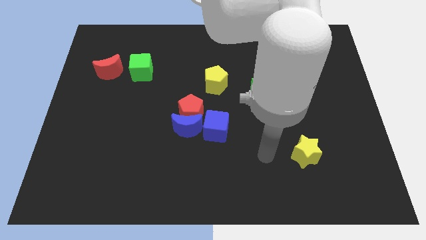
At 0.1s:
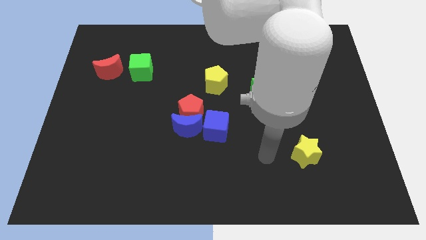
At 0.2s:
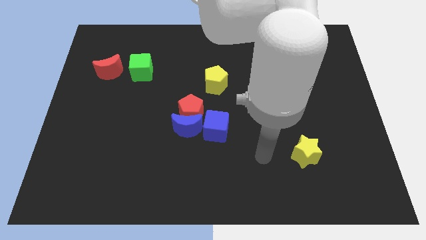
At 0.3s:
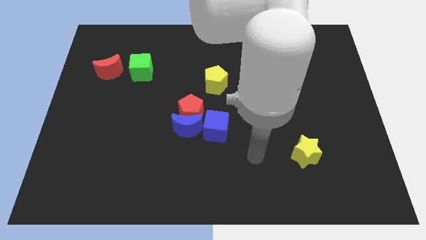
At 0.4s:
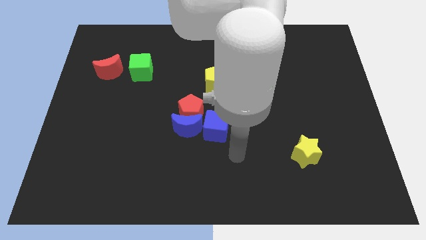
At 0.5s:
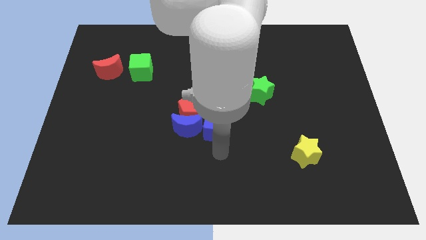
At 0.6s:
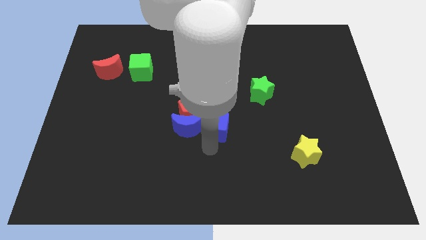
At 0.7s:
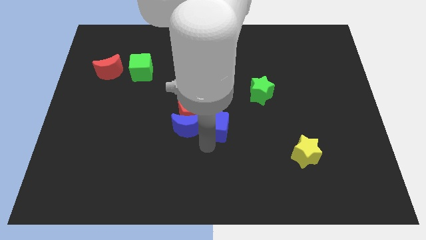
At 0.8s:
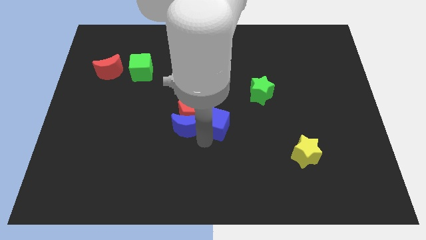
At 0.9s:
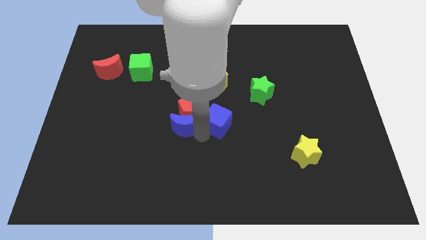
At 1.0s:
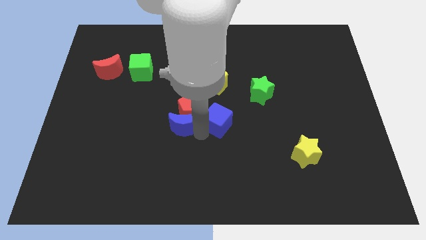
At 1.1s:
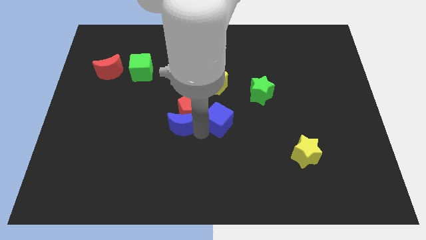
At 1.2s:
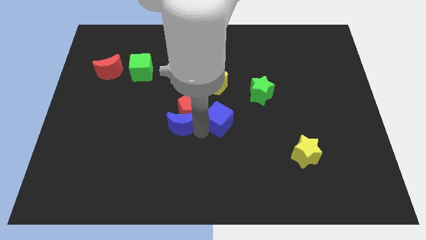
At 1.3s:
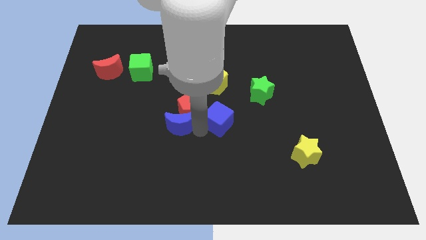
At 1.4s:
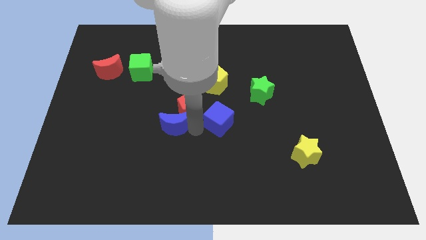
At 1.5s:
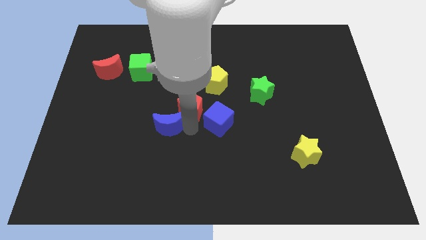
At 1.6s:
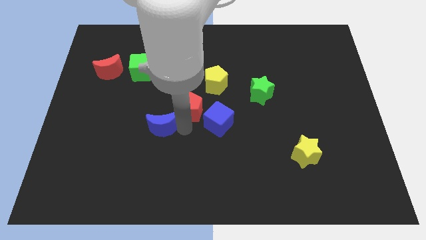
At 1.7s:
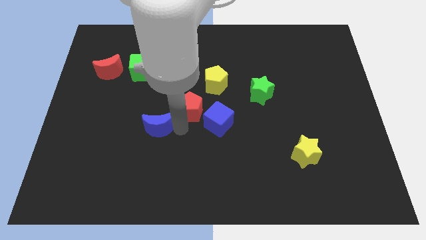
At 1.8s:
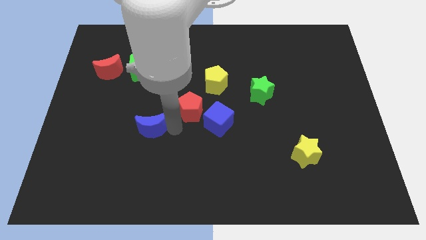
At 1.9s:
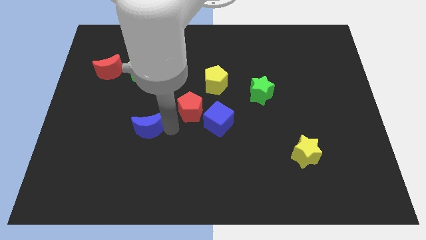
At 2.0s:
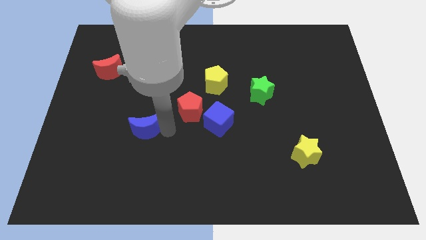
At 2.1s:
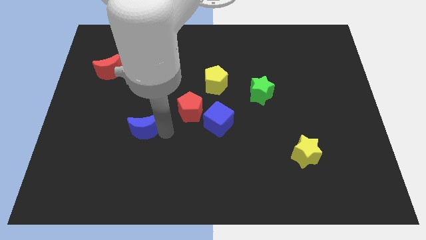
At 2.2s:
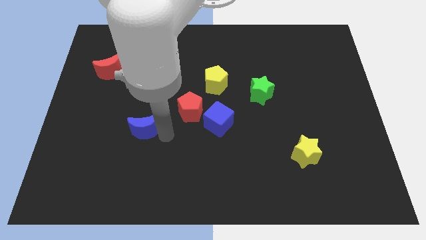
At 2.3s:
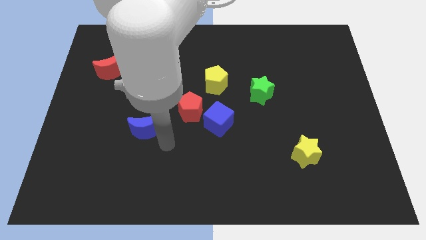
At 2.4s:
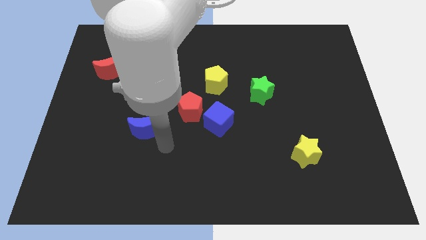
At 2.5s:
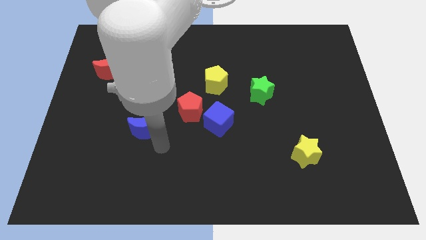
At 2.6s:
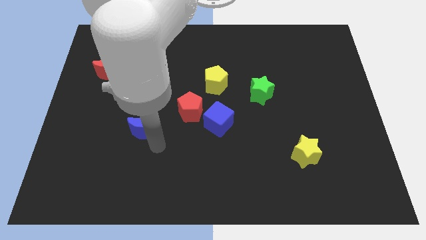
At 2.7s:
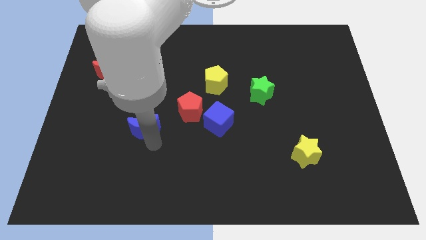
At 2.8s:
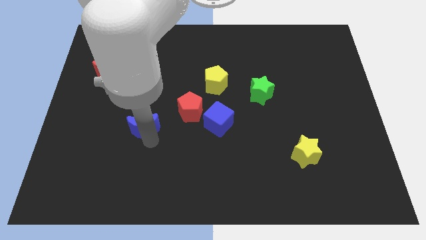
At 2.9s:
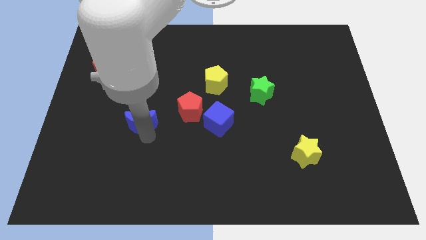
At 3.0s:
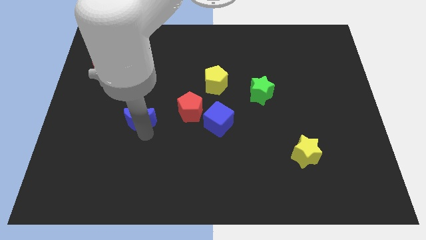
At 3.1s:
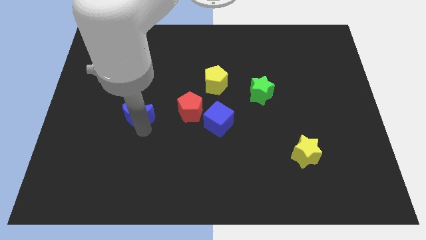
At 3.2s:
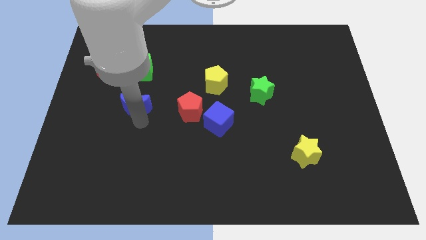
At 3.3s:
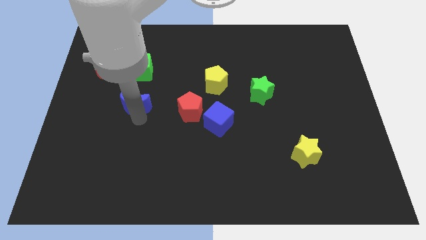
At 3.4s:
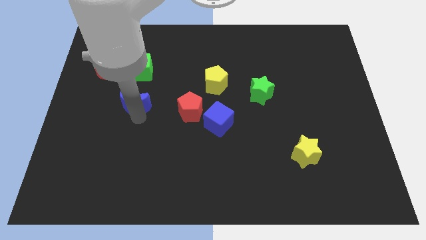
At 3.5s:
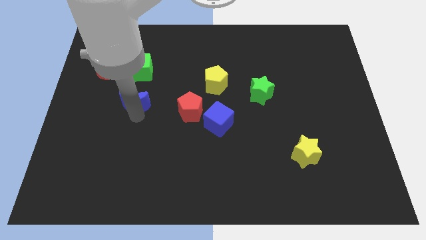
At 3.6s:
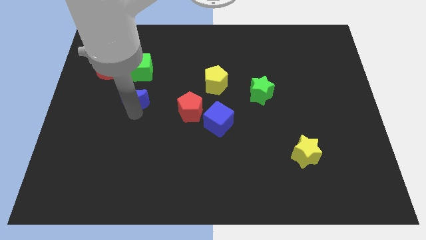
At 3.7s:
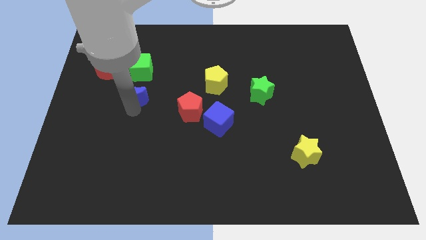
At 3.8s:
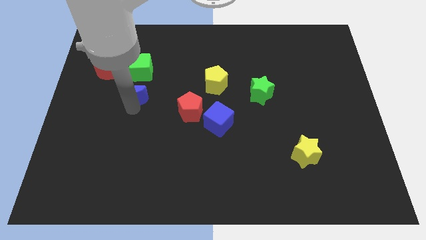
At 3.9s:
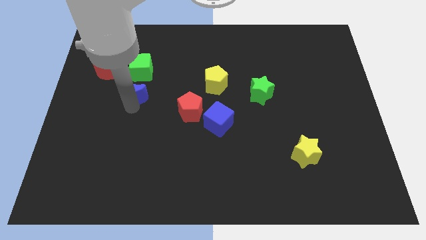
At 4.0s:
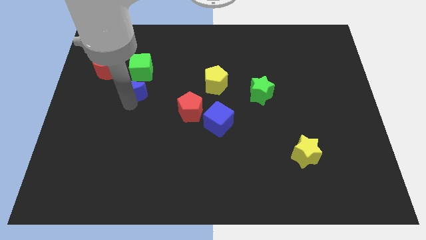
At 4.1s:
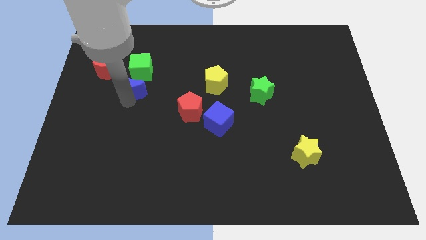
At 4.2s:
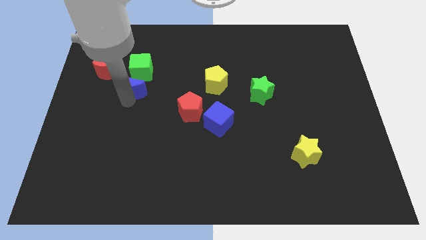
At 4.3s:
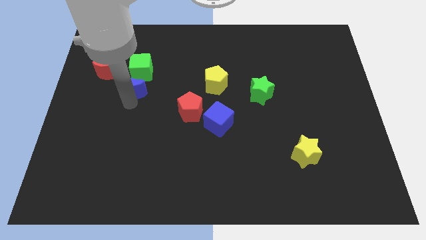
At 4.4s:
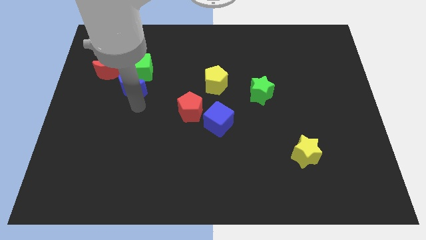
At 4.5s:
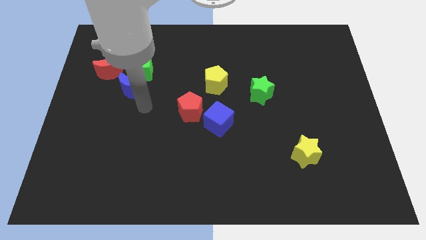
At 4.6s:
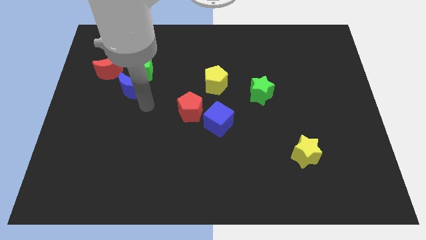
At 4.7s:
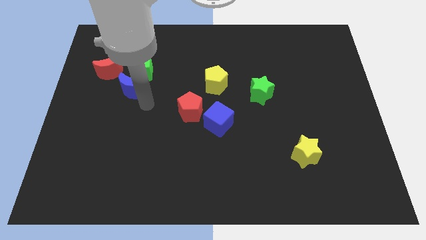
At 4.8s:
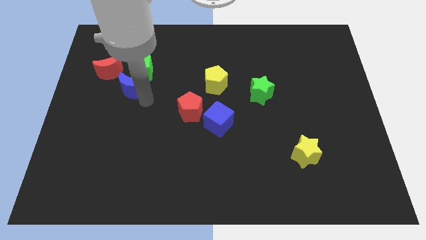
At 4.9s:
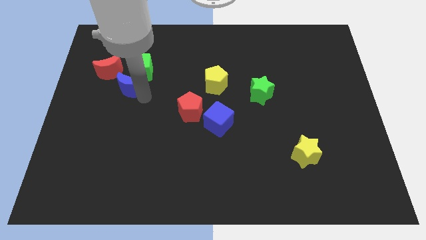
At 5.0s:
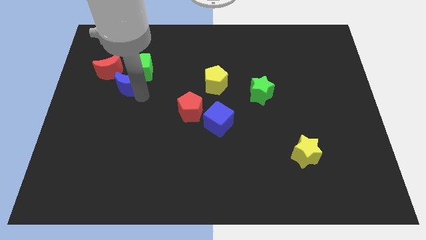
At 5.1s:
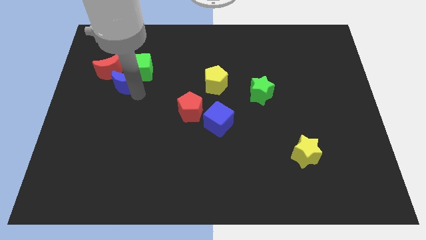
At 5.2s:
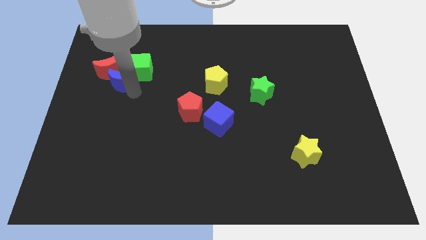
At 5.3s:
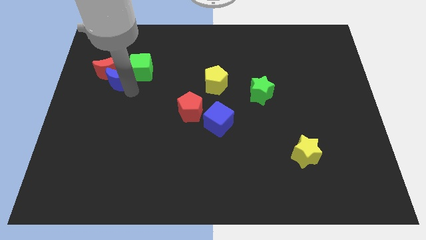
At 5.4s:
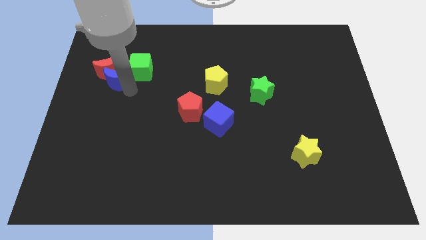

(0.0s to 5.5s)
push the blue moon to the red moon

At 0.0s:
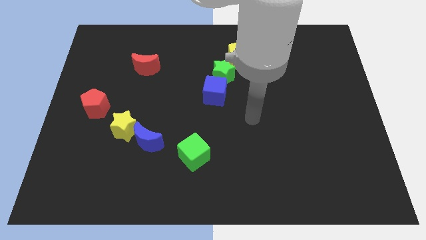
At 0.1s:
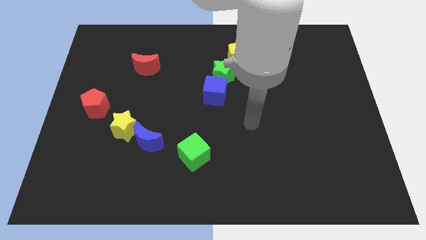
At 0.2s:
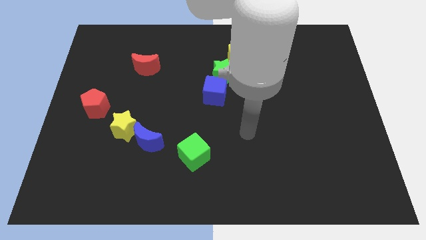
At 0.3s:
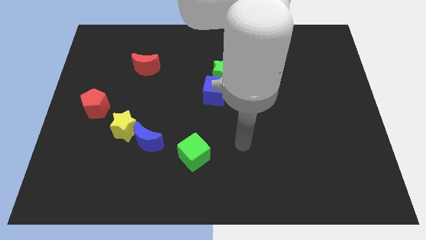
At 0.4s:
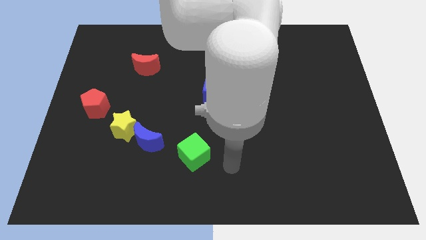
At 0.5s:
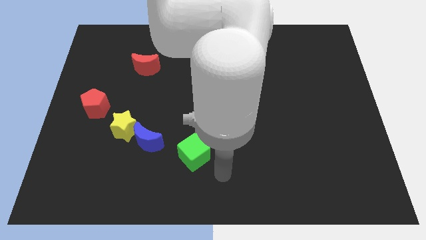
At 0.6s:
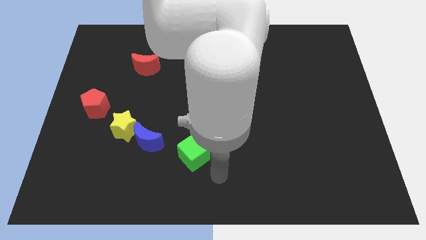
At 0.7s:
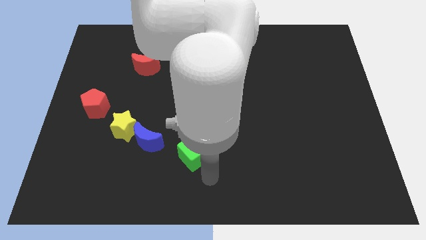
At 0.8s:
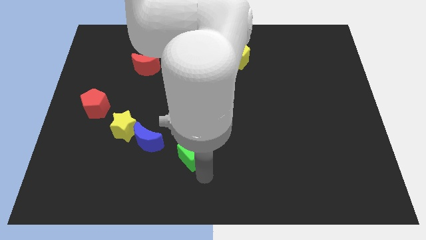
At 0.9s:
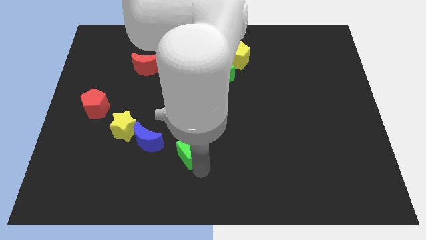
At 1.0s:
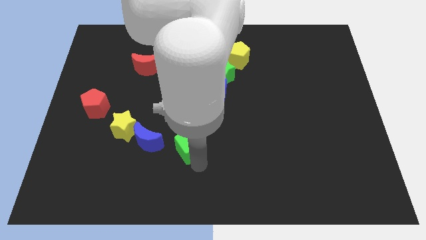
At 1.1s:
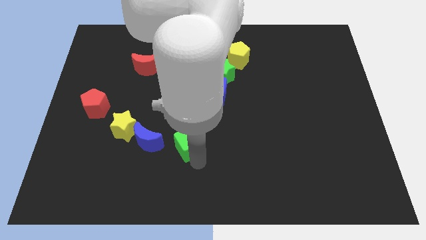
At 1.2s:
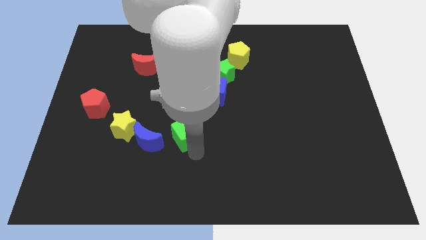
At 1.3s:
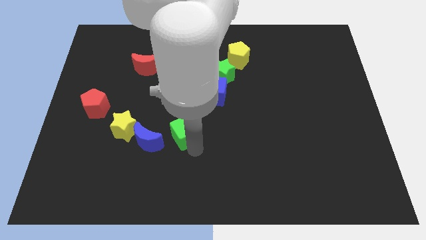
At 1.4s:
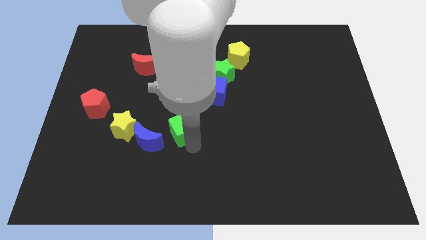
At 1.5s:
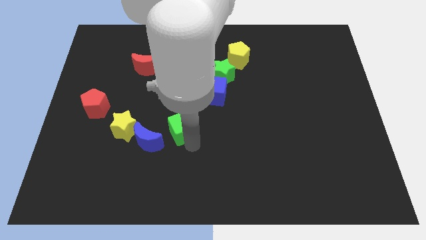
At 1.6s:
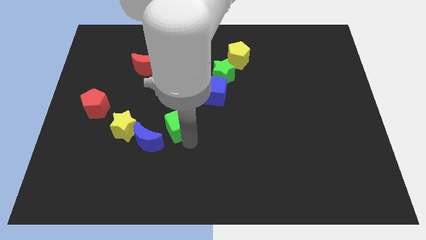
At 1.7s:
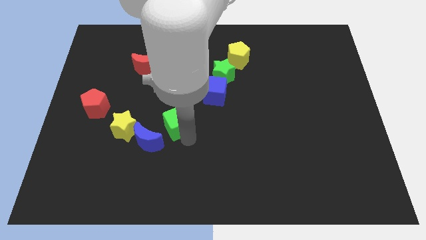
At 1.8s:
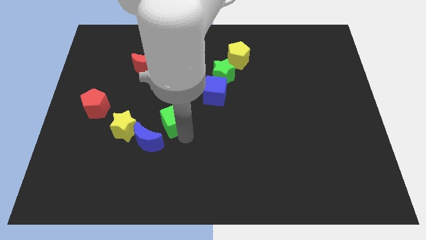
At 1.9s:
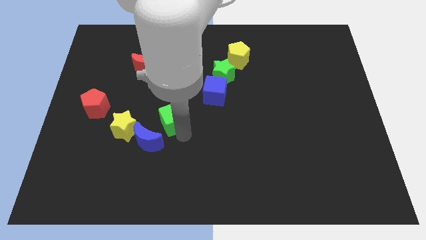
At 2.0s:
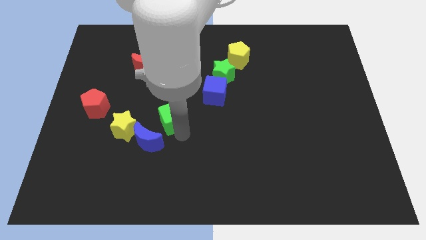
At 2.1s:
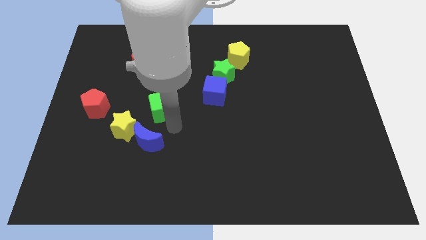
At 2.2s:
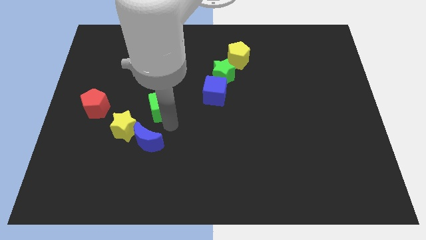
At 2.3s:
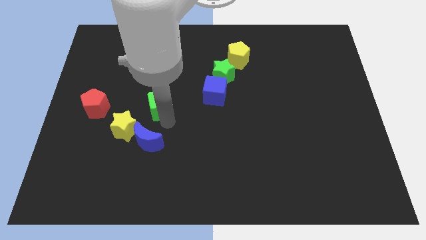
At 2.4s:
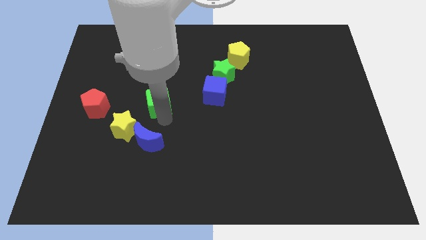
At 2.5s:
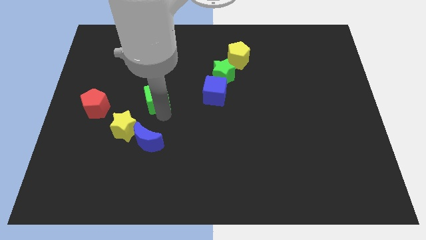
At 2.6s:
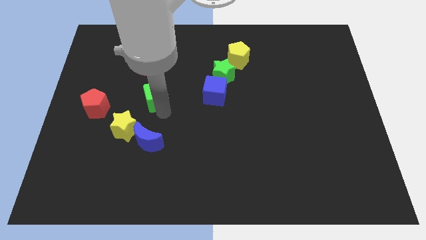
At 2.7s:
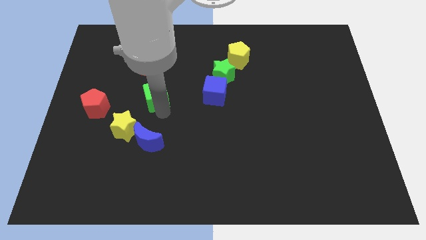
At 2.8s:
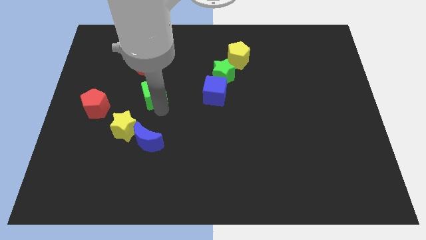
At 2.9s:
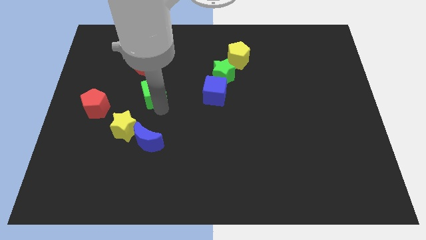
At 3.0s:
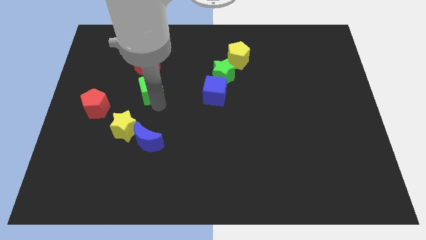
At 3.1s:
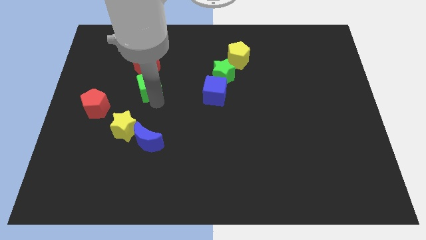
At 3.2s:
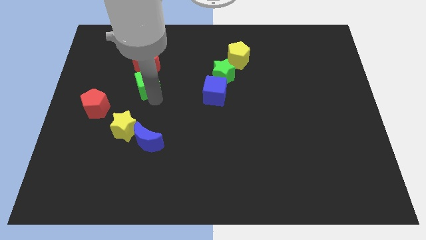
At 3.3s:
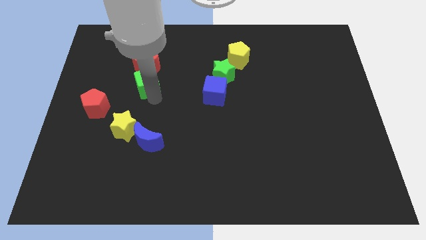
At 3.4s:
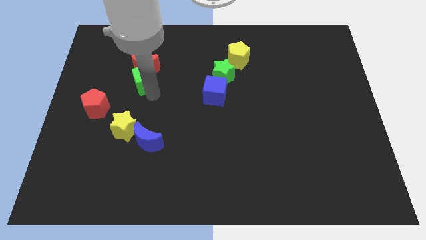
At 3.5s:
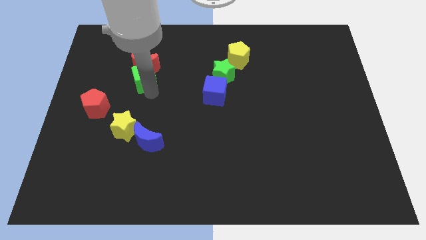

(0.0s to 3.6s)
push the green cube to the red moon
